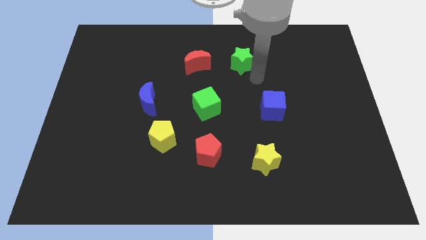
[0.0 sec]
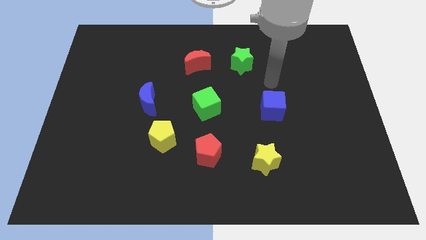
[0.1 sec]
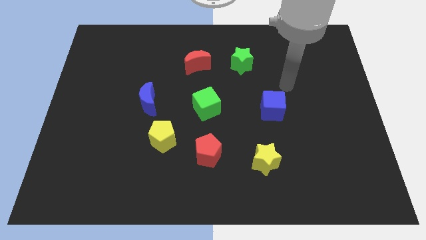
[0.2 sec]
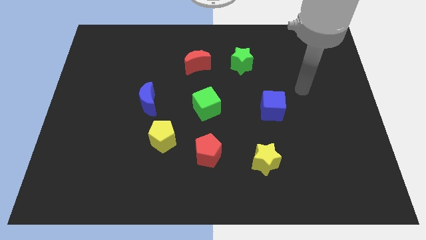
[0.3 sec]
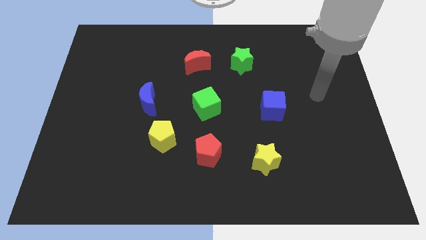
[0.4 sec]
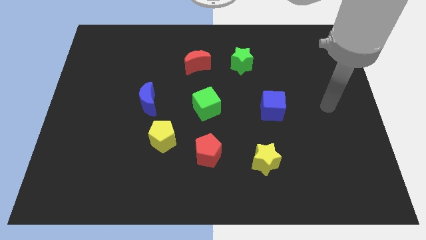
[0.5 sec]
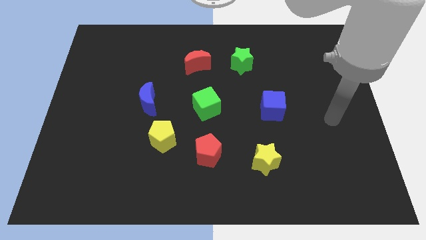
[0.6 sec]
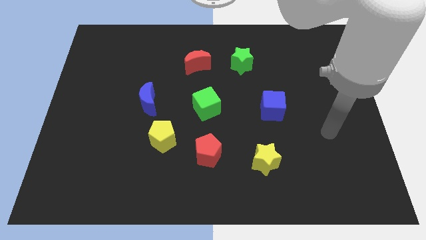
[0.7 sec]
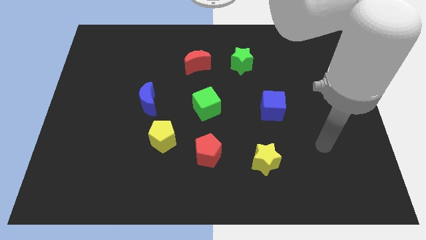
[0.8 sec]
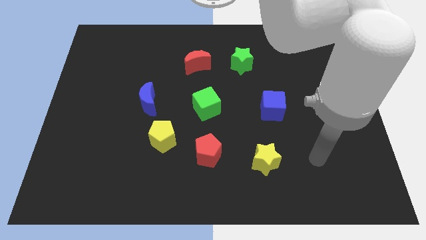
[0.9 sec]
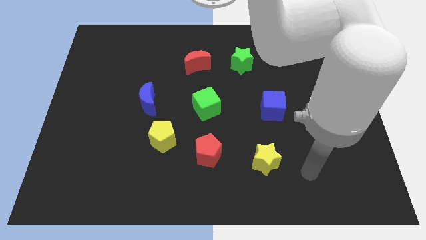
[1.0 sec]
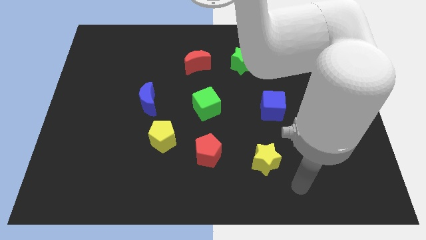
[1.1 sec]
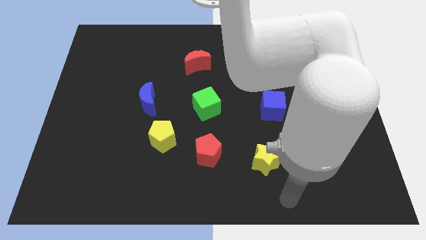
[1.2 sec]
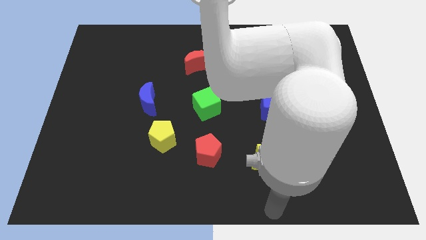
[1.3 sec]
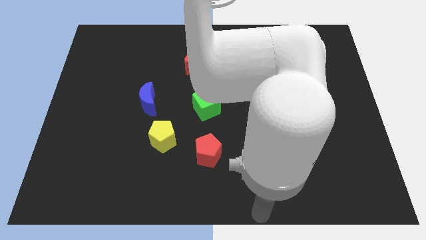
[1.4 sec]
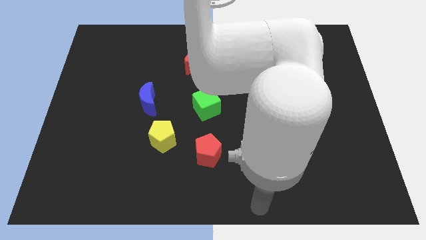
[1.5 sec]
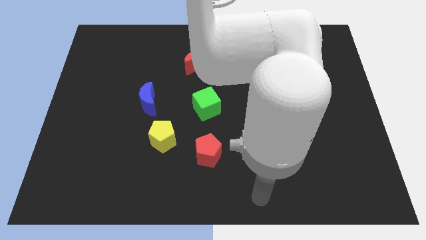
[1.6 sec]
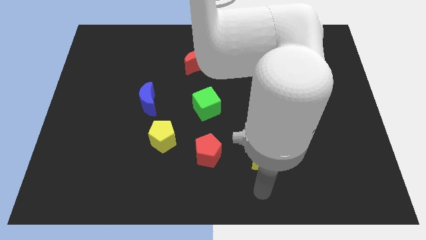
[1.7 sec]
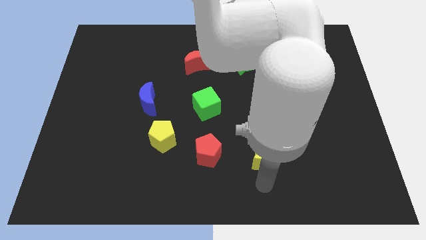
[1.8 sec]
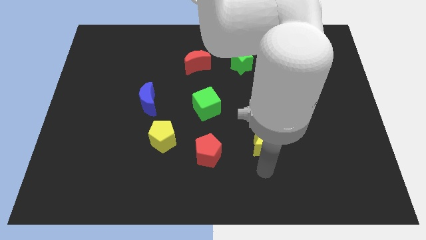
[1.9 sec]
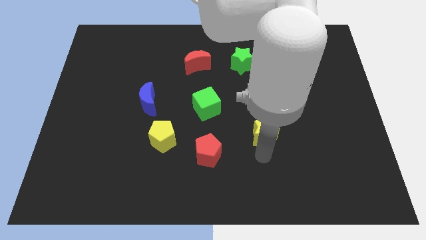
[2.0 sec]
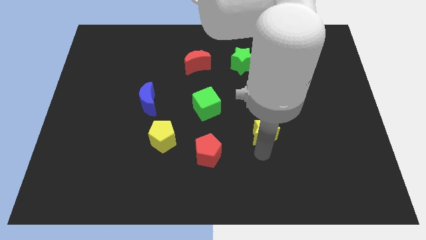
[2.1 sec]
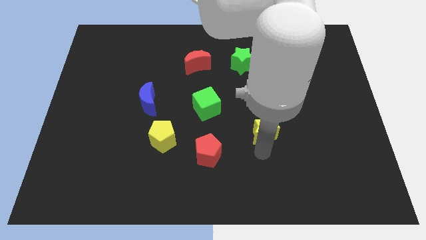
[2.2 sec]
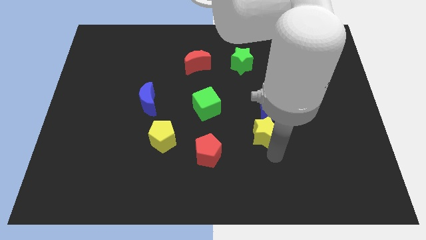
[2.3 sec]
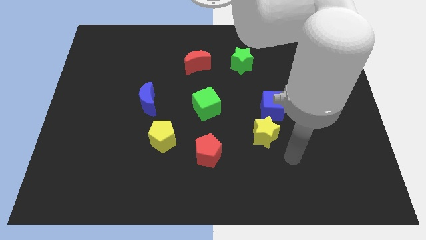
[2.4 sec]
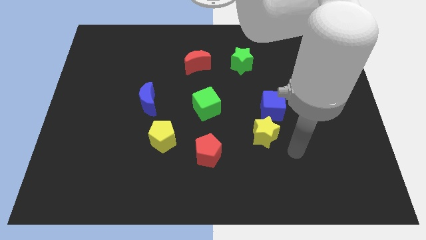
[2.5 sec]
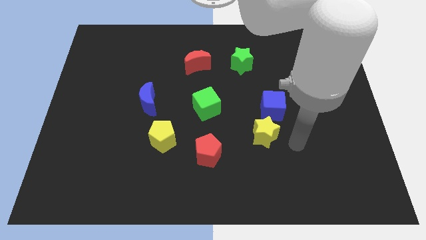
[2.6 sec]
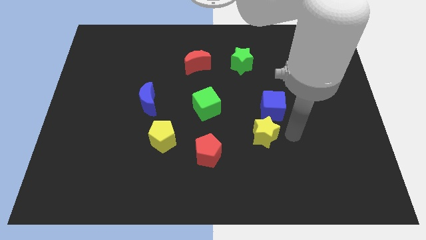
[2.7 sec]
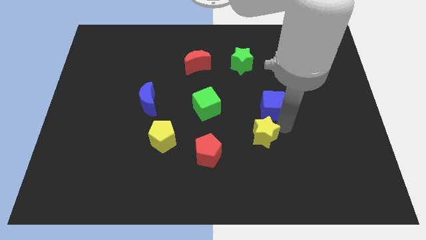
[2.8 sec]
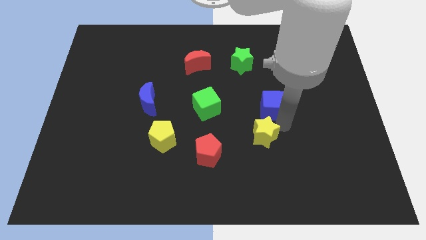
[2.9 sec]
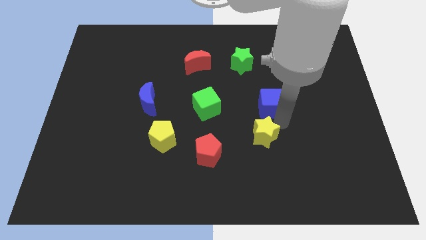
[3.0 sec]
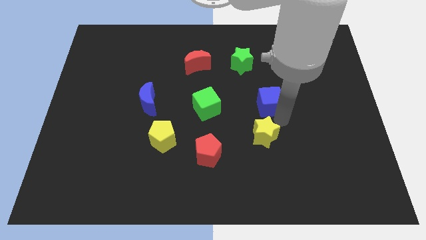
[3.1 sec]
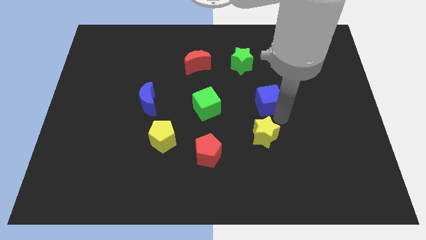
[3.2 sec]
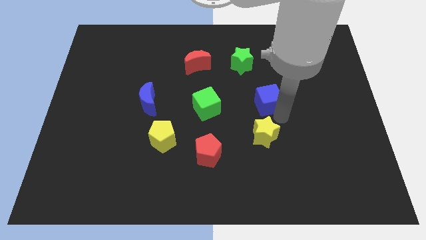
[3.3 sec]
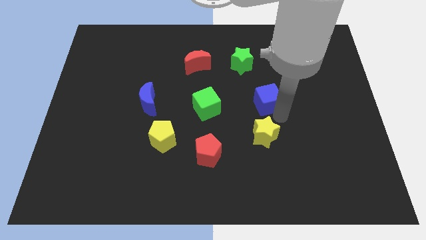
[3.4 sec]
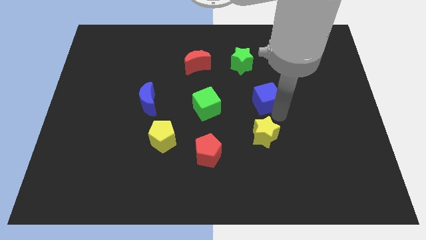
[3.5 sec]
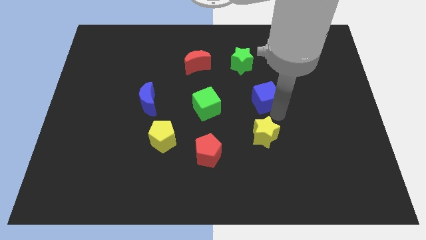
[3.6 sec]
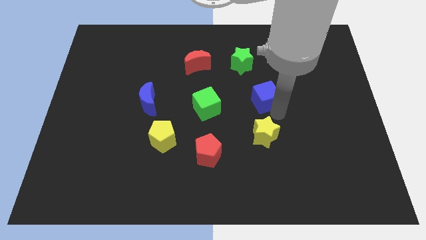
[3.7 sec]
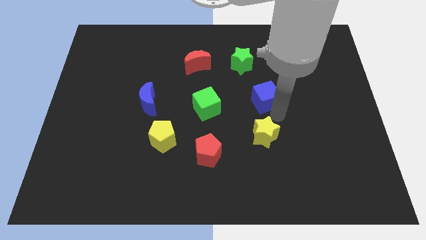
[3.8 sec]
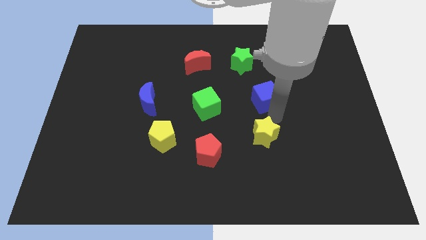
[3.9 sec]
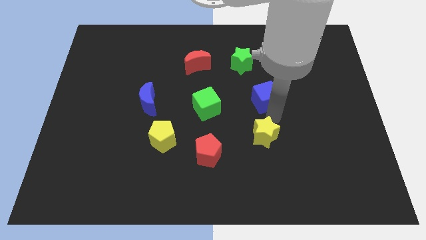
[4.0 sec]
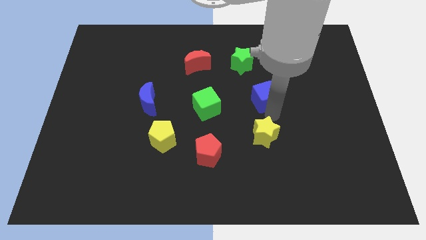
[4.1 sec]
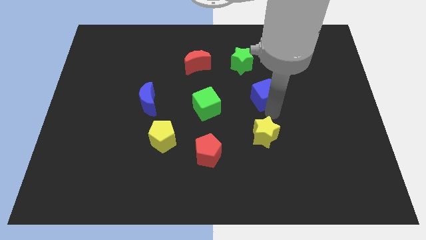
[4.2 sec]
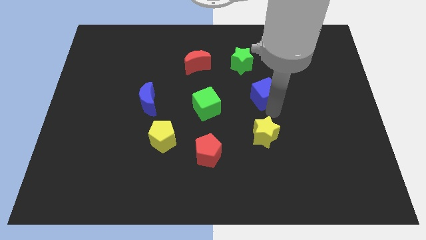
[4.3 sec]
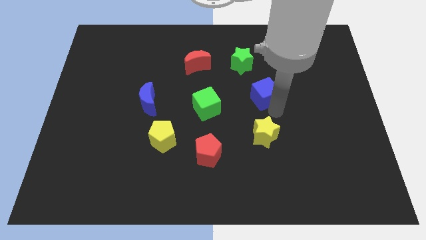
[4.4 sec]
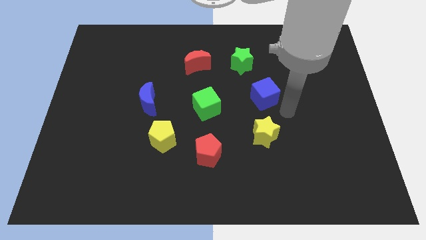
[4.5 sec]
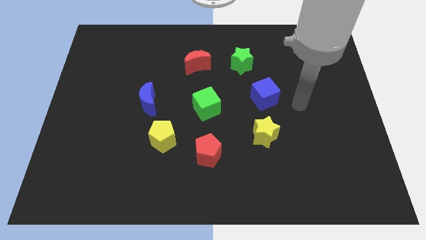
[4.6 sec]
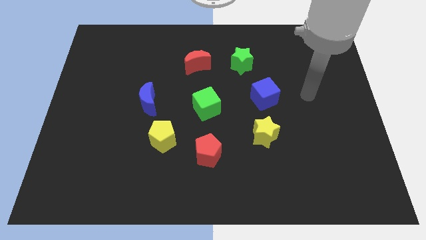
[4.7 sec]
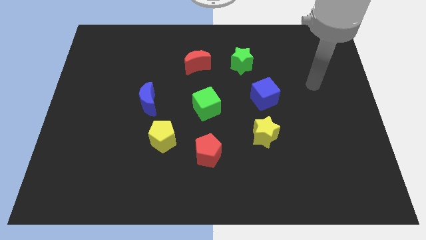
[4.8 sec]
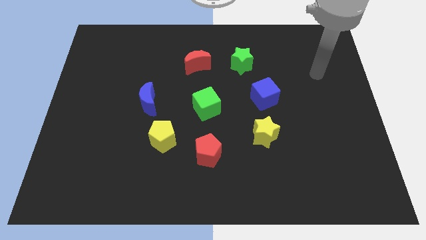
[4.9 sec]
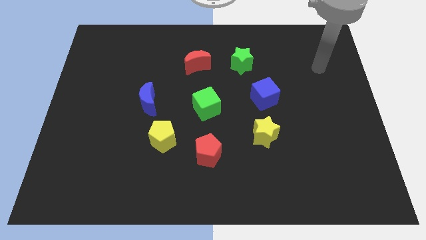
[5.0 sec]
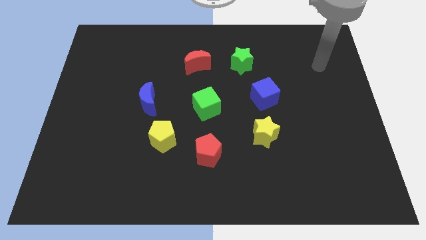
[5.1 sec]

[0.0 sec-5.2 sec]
place the blue cube and yellow star in a line vertically

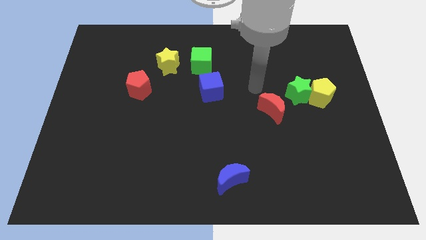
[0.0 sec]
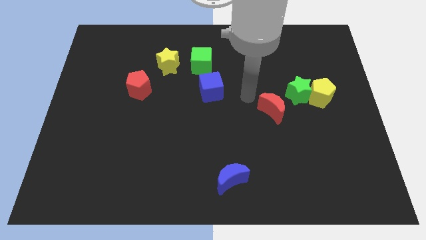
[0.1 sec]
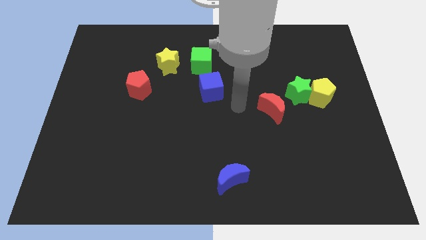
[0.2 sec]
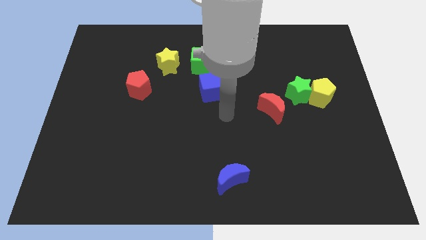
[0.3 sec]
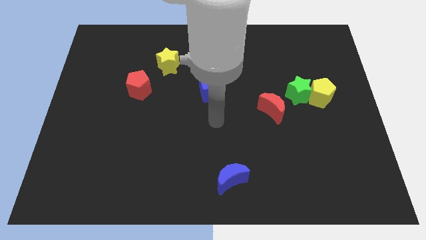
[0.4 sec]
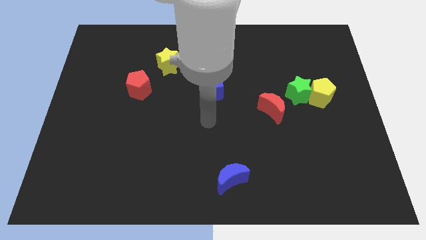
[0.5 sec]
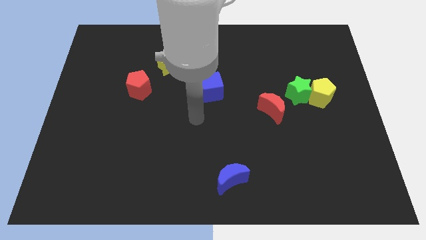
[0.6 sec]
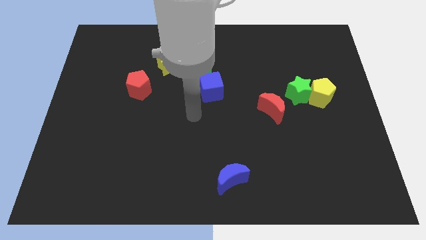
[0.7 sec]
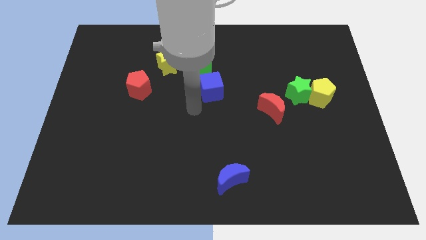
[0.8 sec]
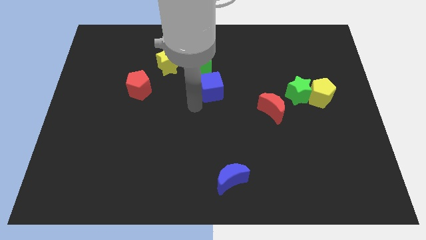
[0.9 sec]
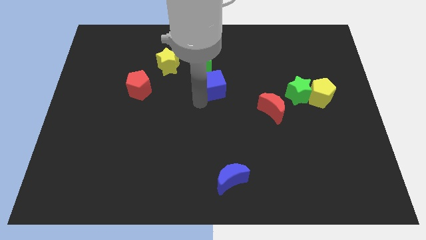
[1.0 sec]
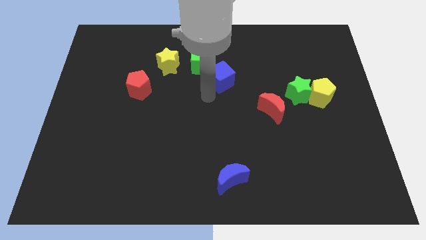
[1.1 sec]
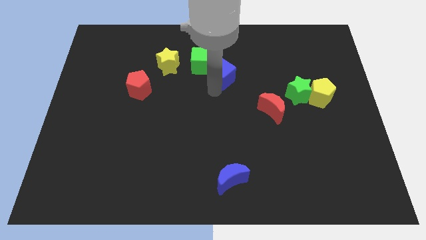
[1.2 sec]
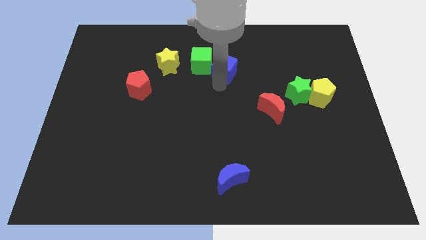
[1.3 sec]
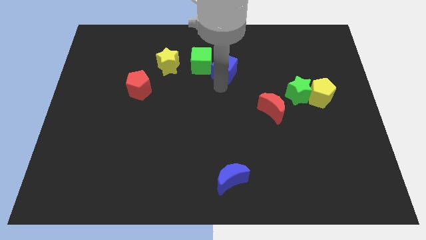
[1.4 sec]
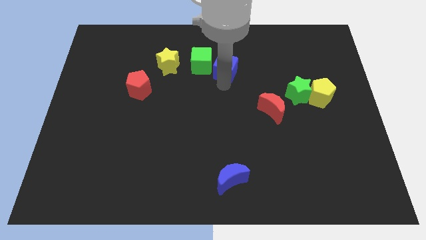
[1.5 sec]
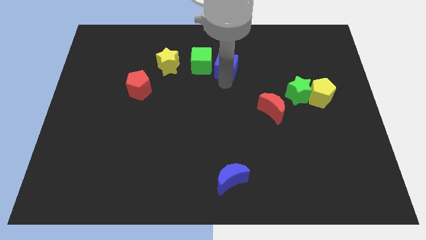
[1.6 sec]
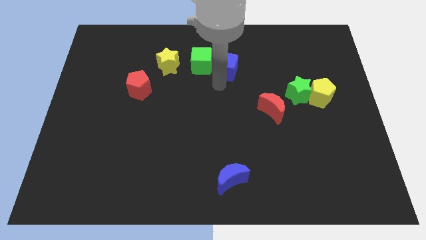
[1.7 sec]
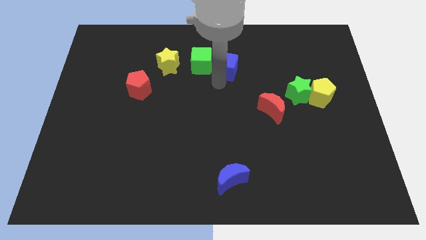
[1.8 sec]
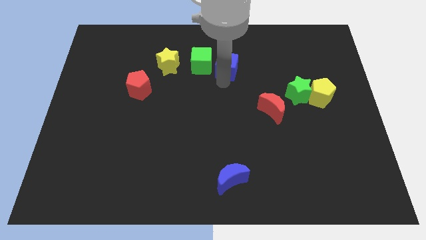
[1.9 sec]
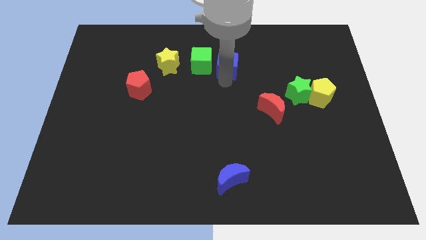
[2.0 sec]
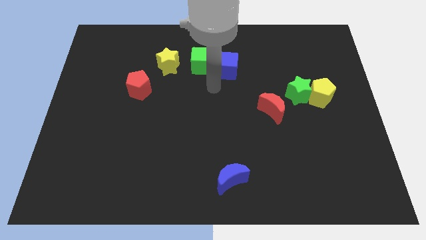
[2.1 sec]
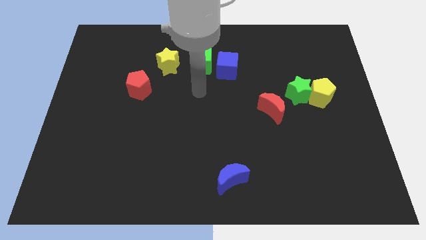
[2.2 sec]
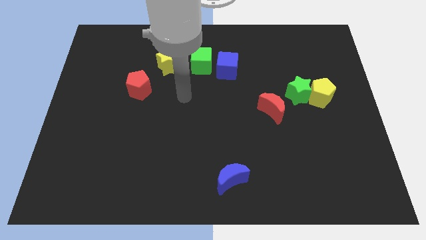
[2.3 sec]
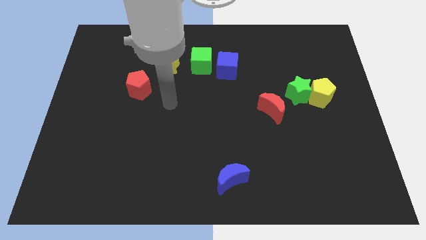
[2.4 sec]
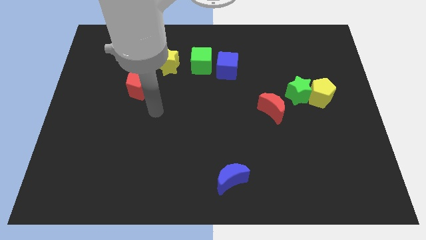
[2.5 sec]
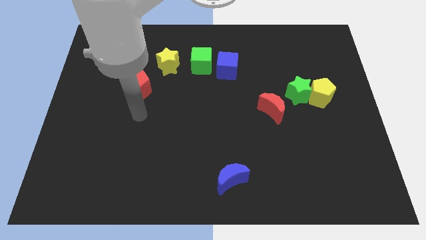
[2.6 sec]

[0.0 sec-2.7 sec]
move the blue cube to the right of the green cube

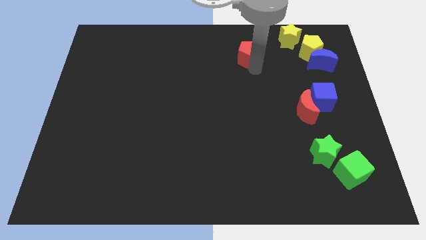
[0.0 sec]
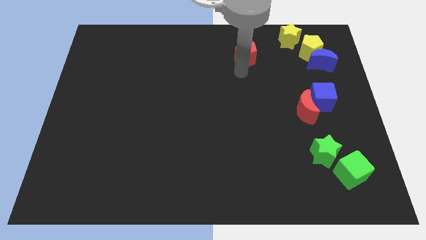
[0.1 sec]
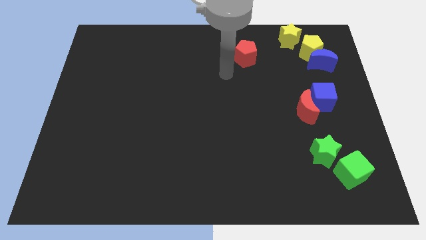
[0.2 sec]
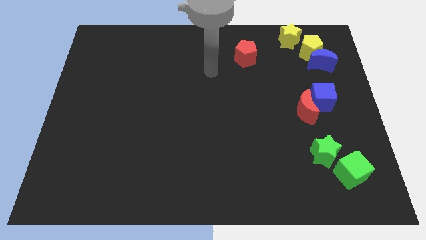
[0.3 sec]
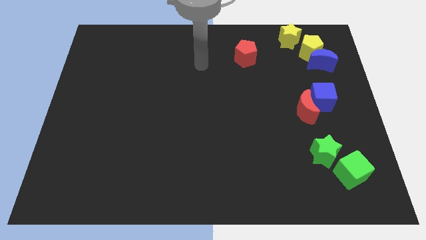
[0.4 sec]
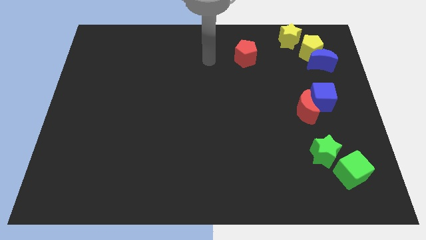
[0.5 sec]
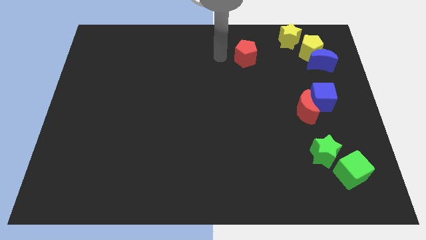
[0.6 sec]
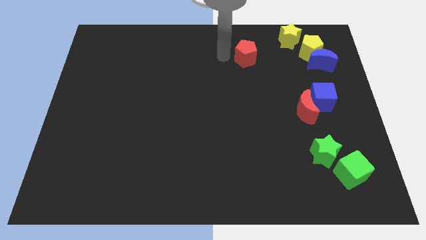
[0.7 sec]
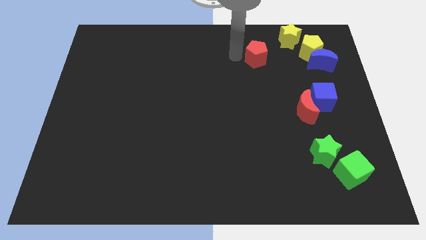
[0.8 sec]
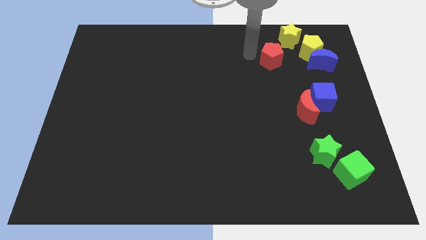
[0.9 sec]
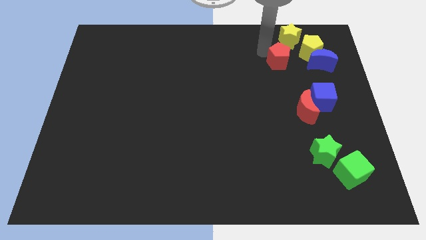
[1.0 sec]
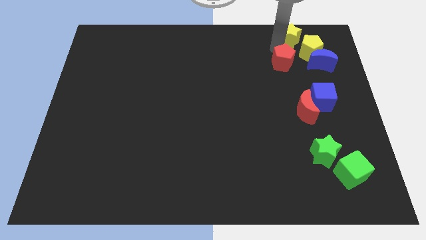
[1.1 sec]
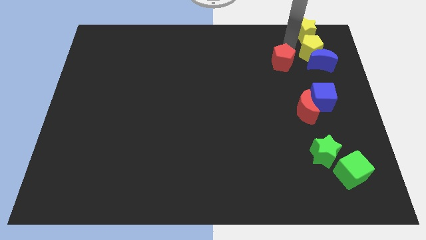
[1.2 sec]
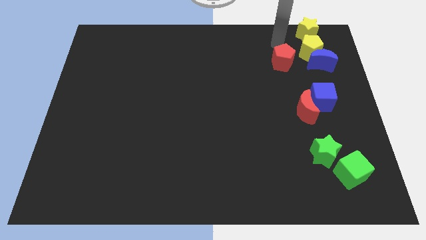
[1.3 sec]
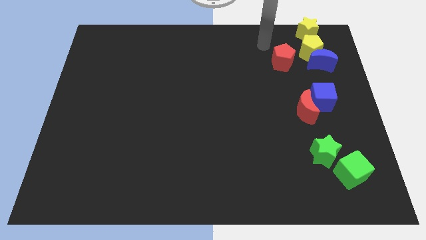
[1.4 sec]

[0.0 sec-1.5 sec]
push the red pentagon towards the top right corner of the board
